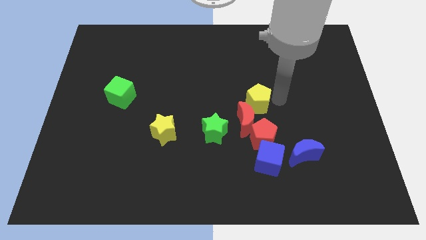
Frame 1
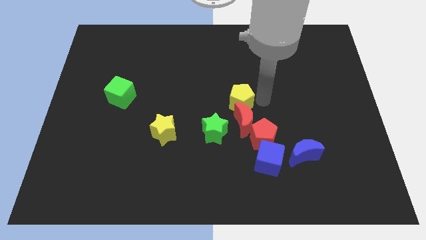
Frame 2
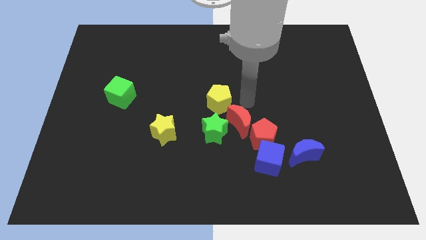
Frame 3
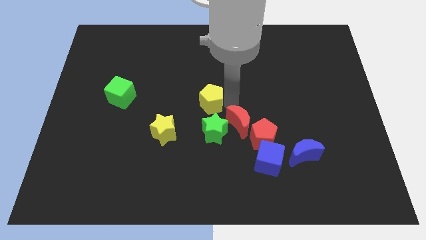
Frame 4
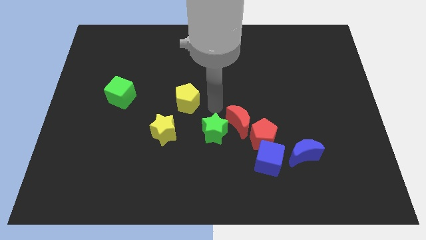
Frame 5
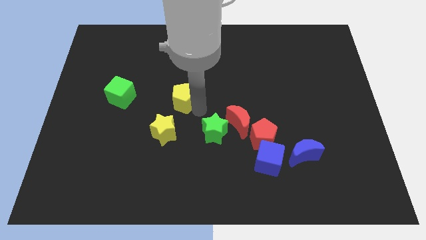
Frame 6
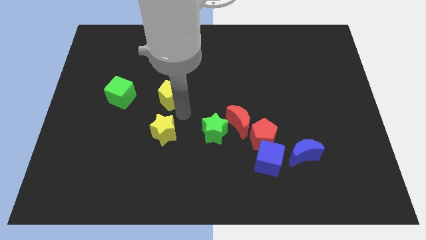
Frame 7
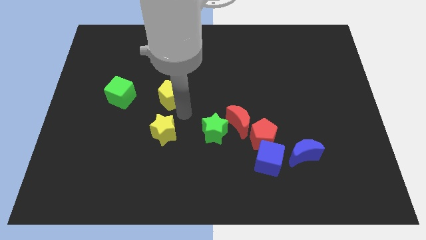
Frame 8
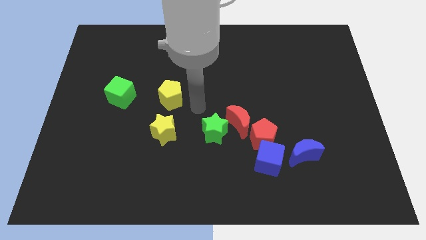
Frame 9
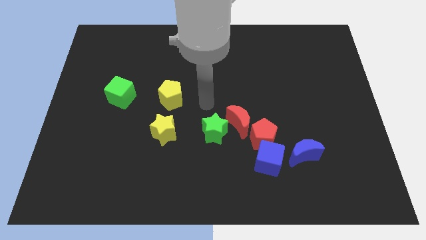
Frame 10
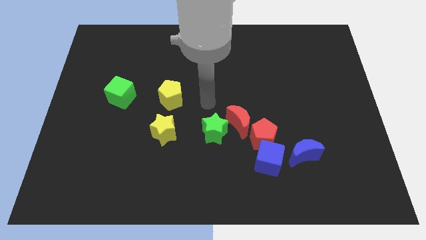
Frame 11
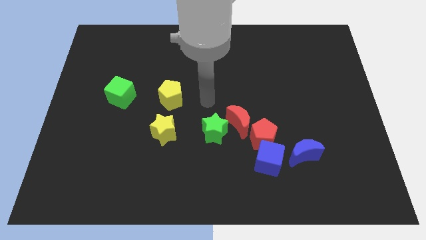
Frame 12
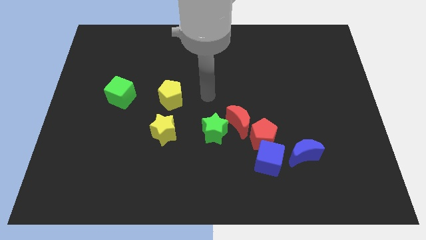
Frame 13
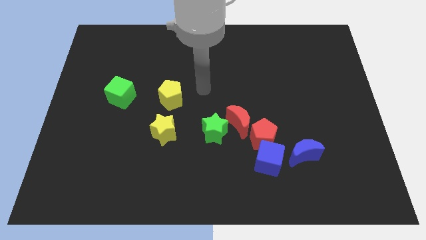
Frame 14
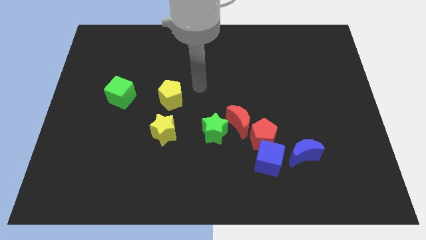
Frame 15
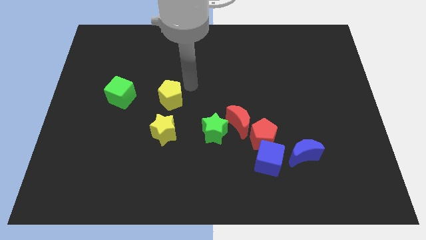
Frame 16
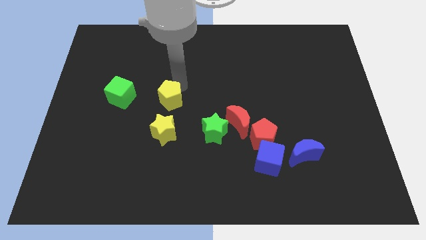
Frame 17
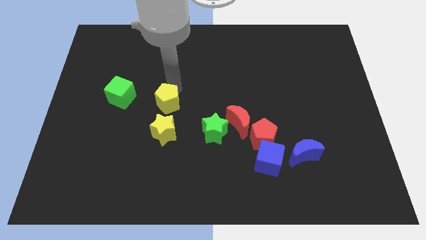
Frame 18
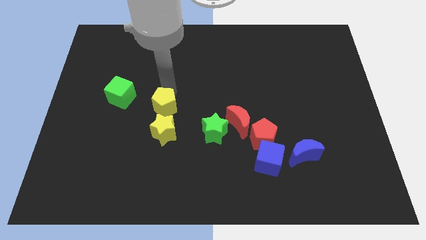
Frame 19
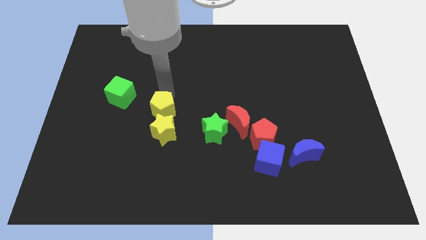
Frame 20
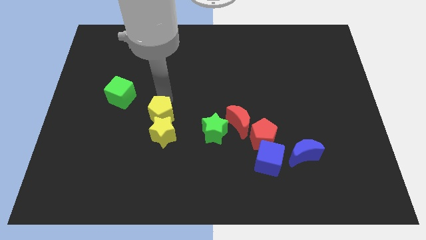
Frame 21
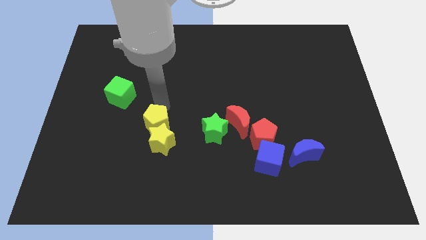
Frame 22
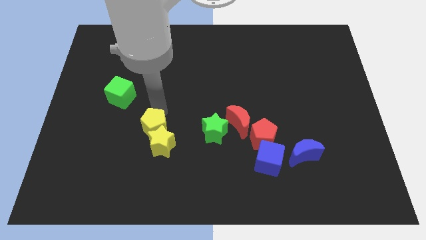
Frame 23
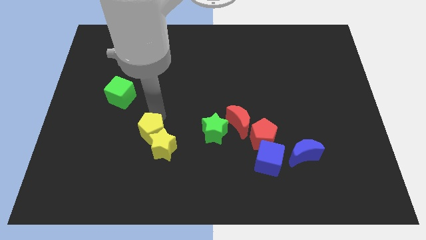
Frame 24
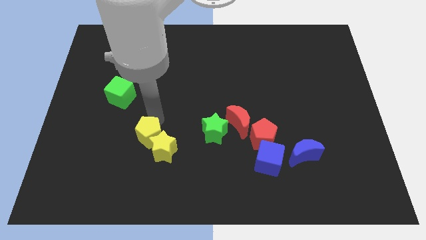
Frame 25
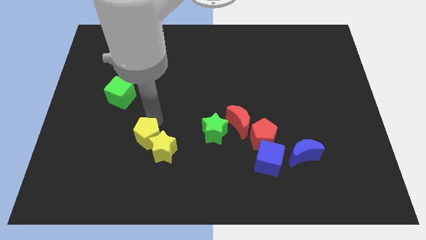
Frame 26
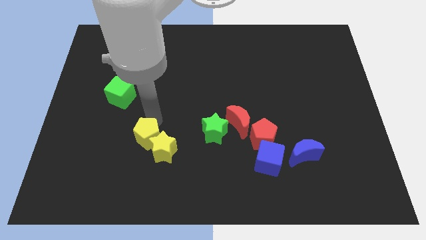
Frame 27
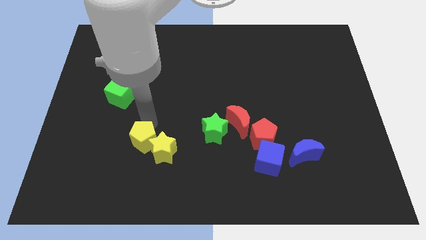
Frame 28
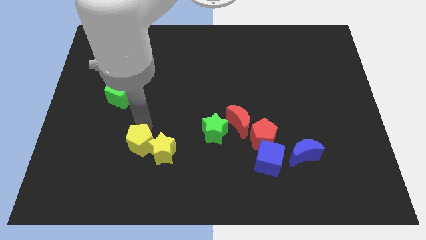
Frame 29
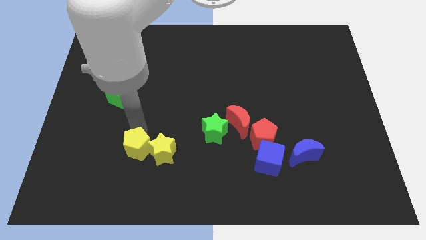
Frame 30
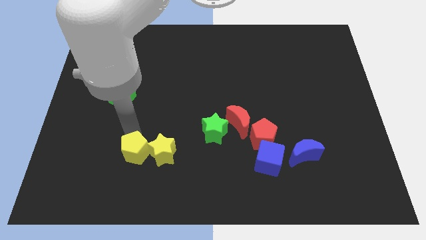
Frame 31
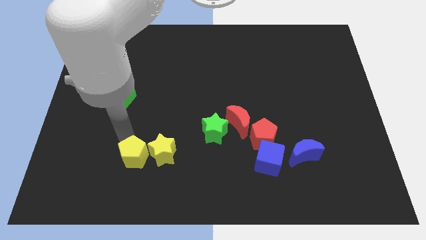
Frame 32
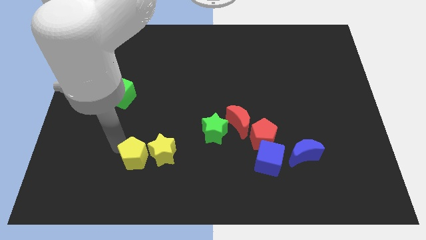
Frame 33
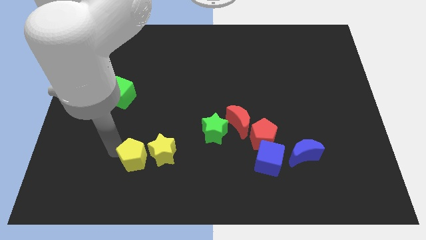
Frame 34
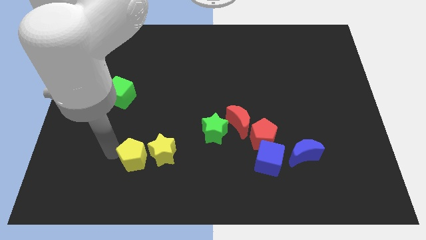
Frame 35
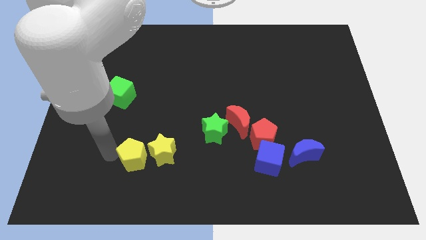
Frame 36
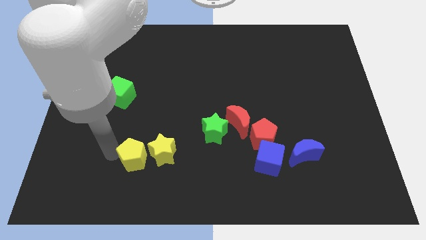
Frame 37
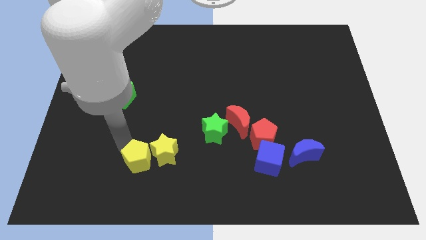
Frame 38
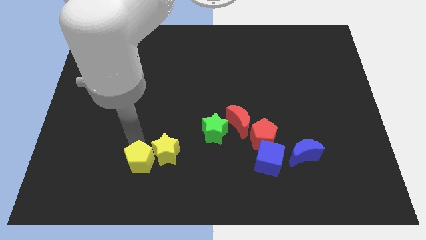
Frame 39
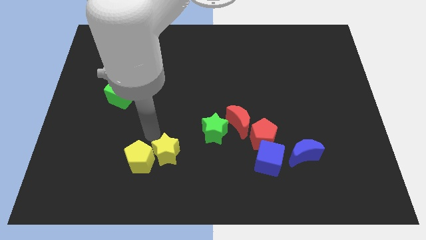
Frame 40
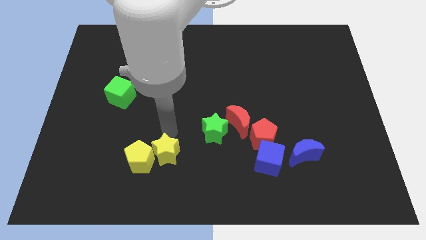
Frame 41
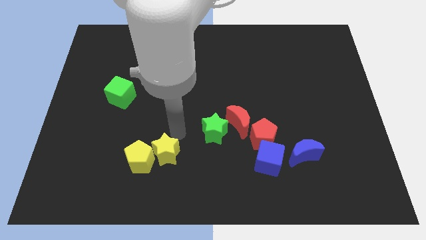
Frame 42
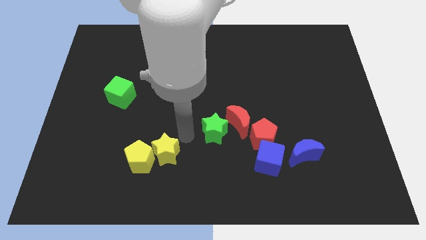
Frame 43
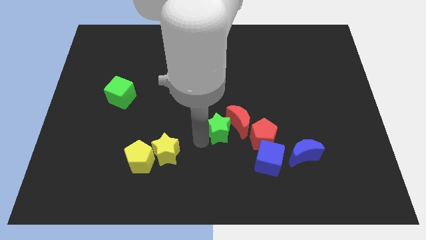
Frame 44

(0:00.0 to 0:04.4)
move the yellow pentagon to the left of the yellow star

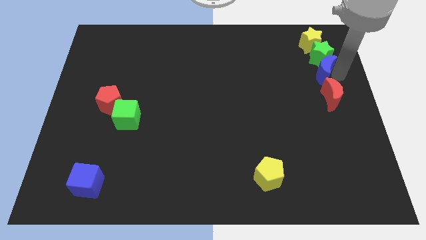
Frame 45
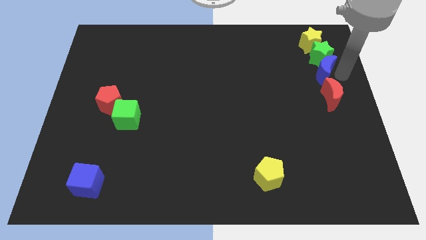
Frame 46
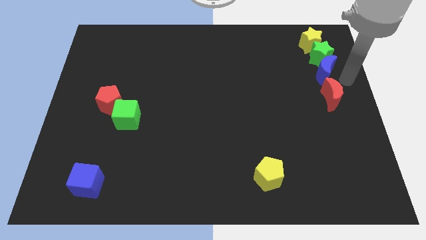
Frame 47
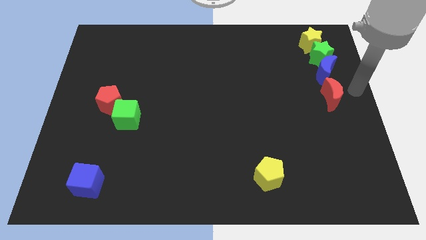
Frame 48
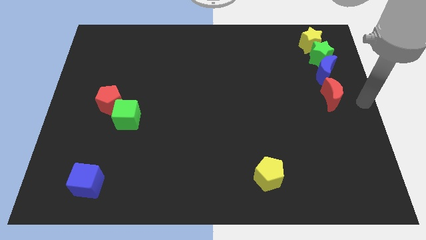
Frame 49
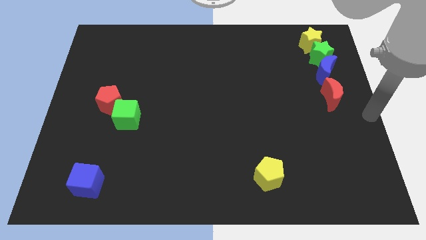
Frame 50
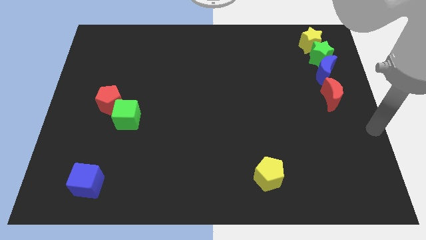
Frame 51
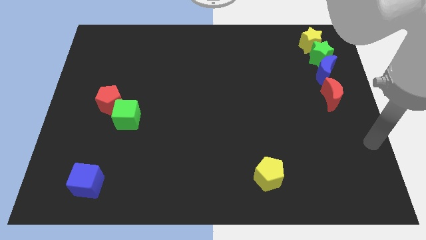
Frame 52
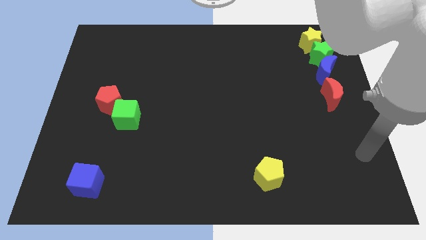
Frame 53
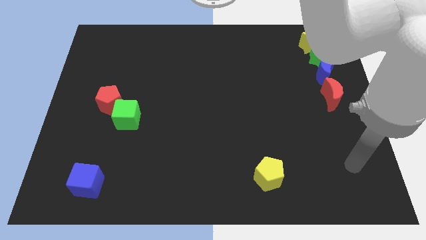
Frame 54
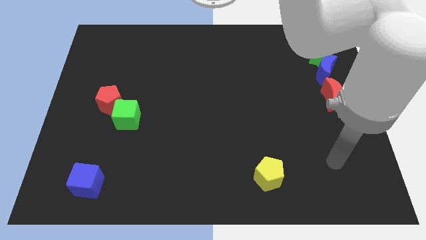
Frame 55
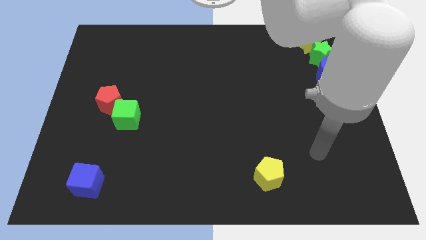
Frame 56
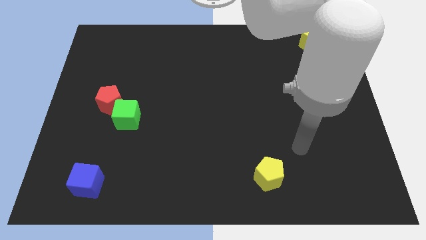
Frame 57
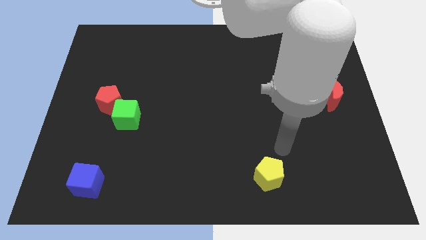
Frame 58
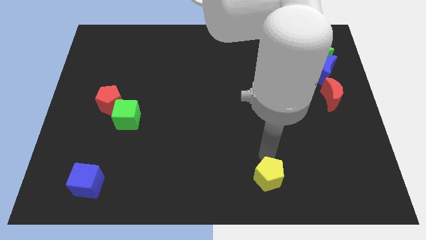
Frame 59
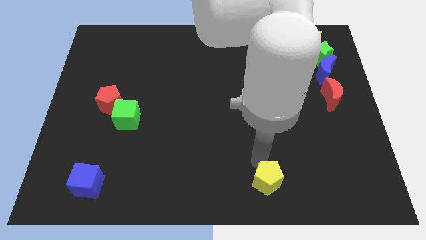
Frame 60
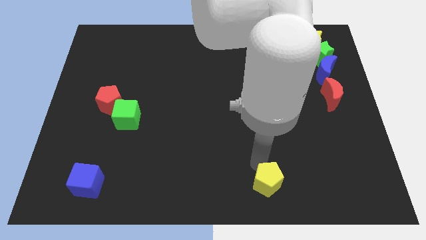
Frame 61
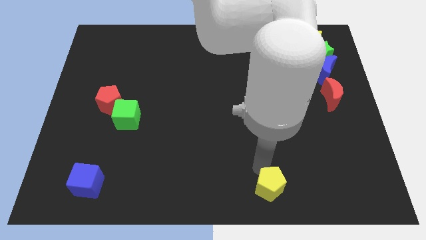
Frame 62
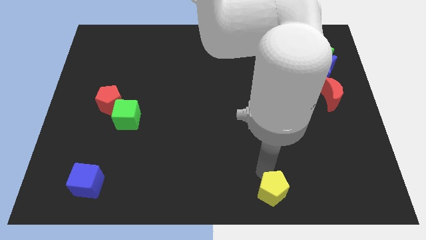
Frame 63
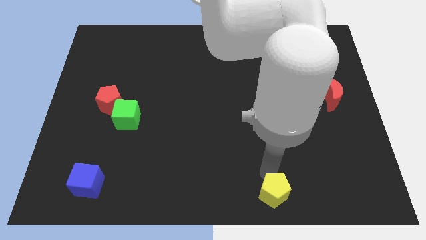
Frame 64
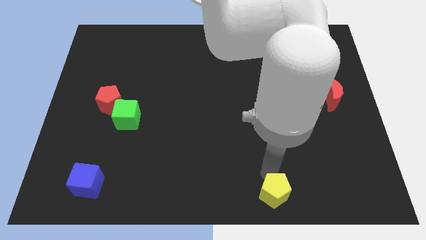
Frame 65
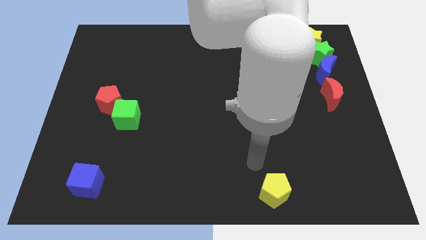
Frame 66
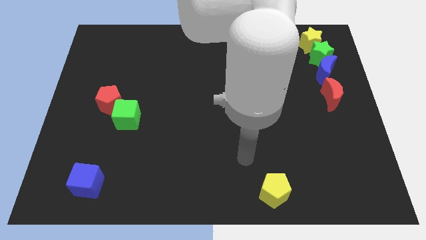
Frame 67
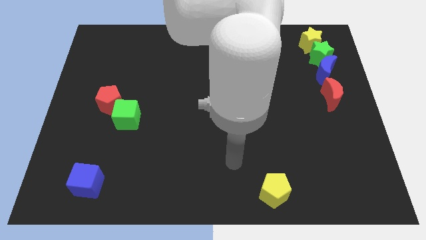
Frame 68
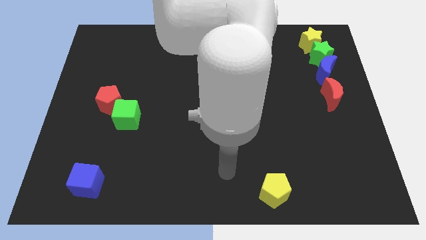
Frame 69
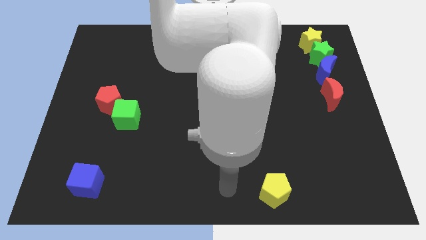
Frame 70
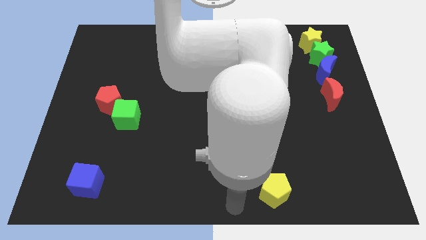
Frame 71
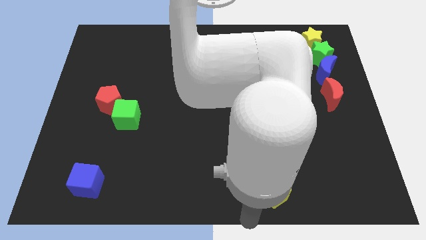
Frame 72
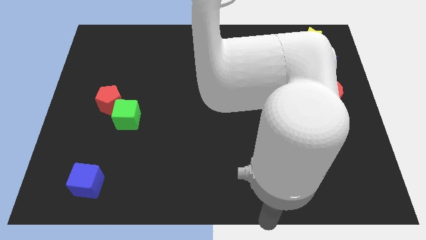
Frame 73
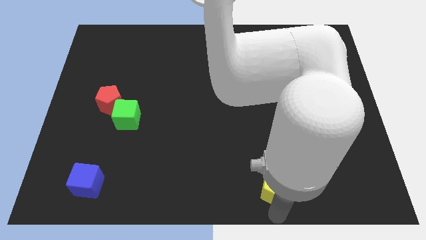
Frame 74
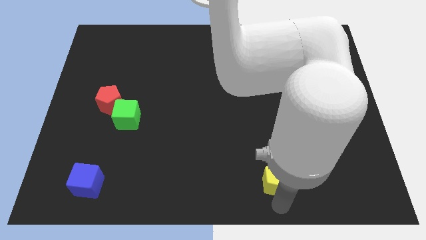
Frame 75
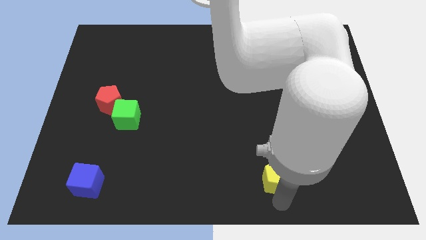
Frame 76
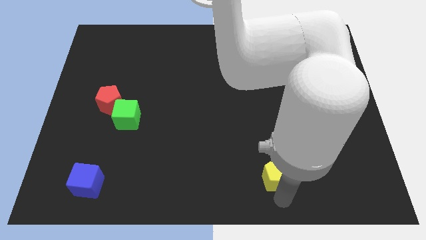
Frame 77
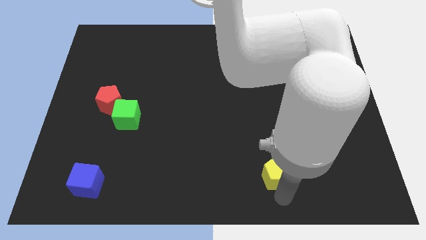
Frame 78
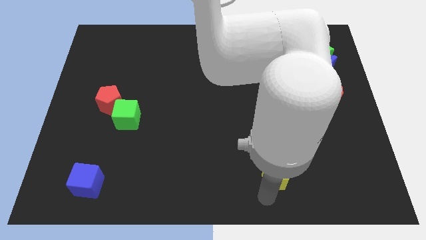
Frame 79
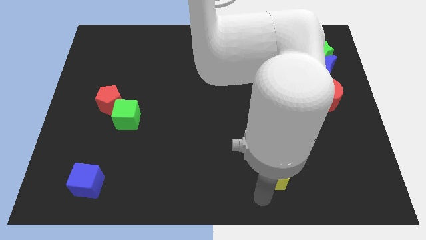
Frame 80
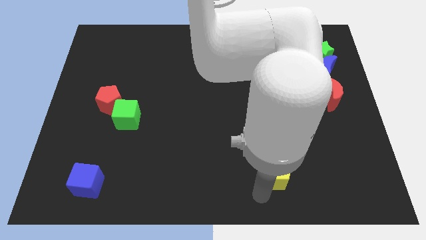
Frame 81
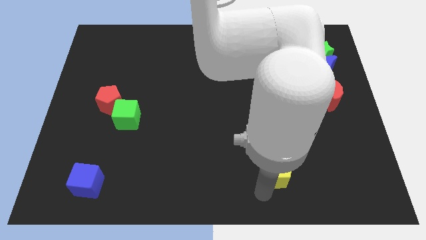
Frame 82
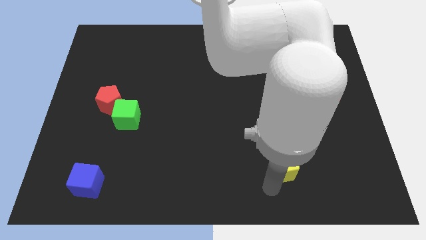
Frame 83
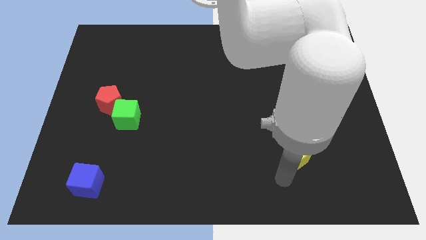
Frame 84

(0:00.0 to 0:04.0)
move your arm towards the yellow pentagon

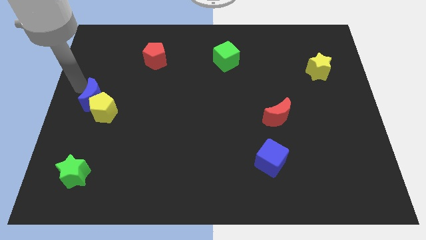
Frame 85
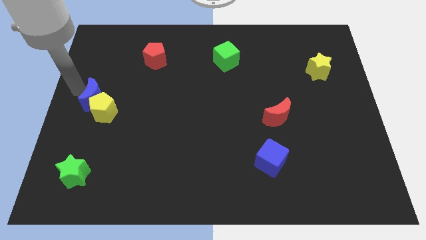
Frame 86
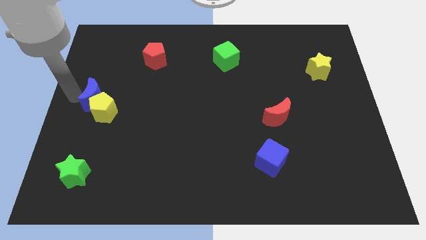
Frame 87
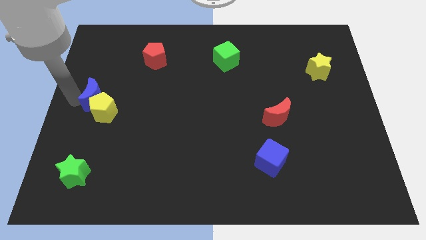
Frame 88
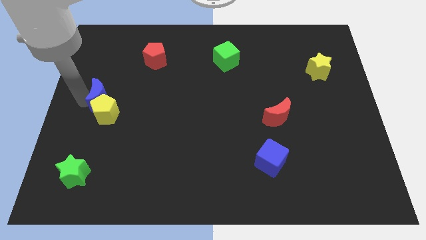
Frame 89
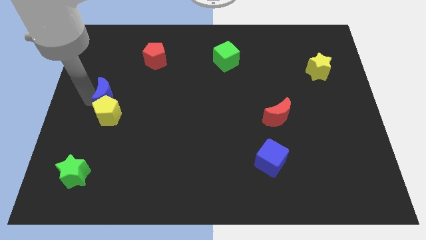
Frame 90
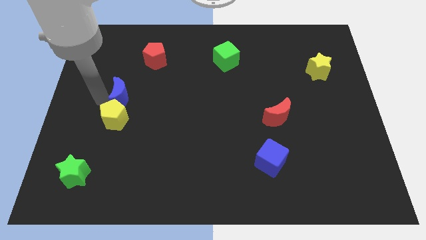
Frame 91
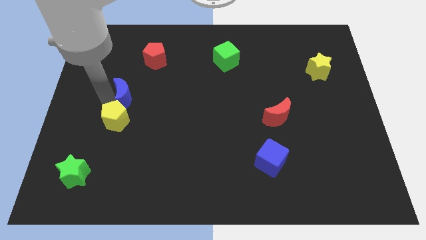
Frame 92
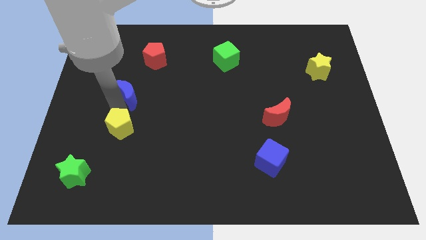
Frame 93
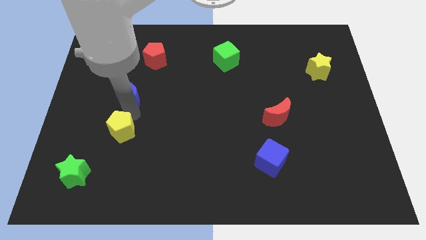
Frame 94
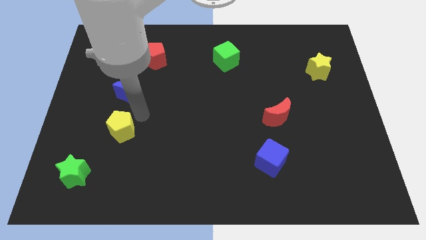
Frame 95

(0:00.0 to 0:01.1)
separate blue crescent from yellow pentagon
